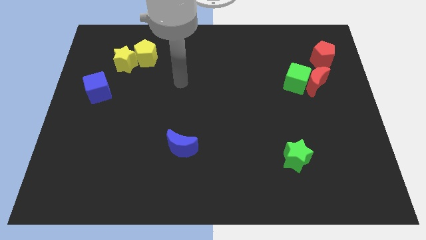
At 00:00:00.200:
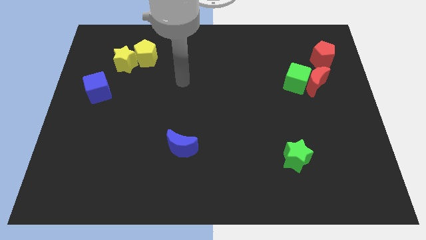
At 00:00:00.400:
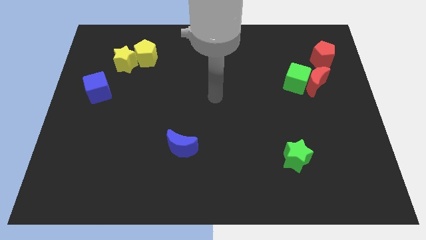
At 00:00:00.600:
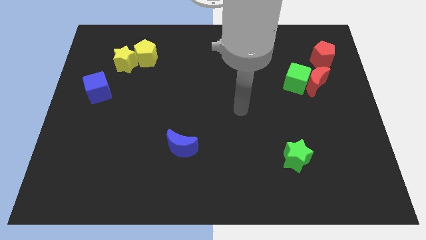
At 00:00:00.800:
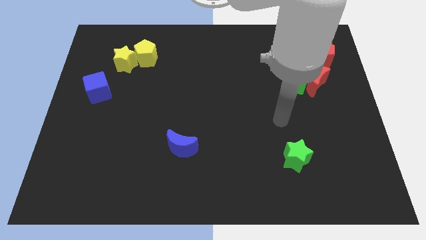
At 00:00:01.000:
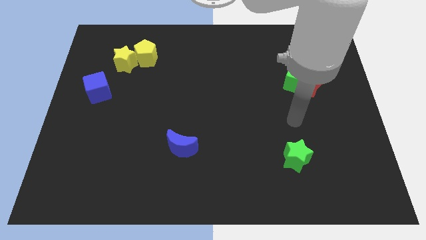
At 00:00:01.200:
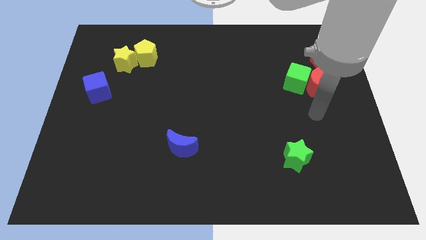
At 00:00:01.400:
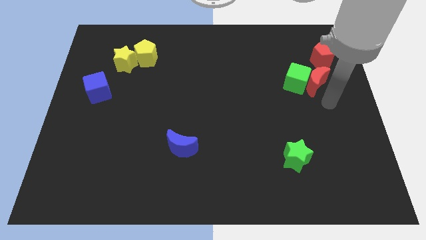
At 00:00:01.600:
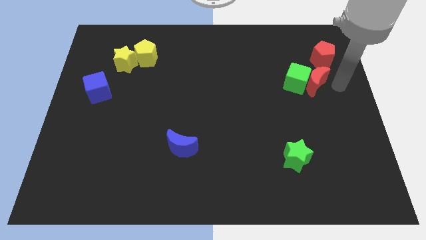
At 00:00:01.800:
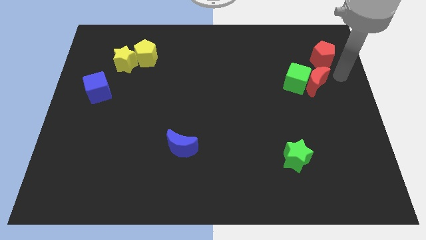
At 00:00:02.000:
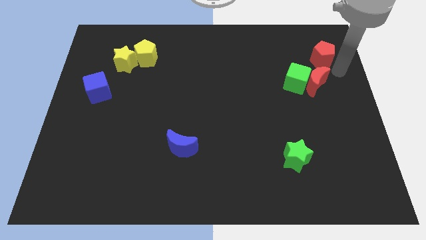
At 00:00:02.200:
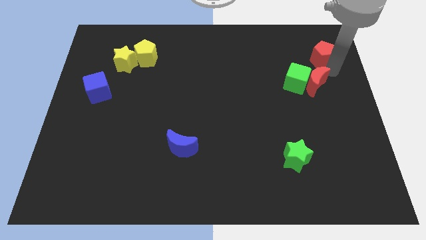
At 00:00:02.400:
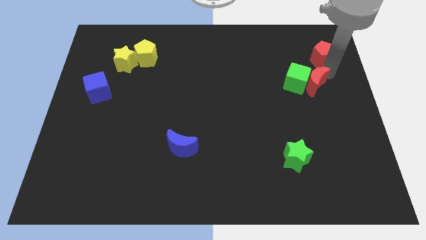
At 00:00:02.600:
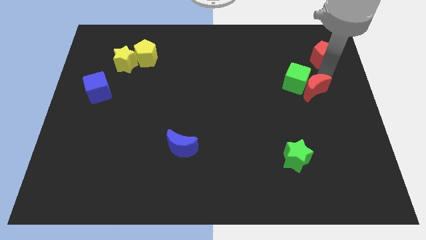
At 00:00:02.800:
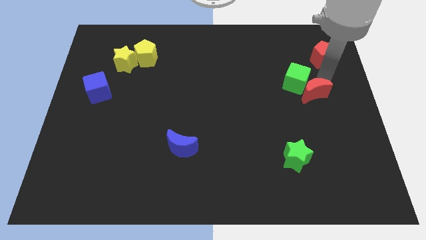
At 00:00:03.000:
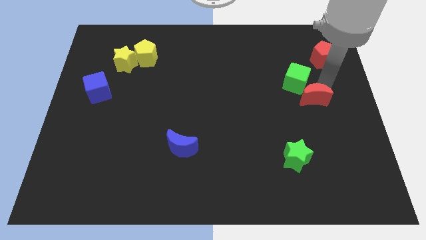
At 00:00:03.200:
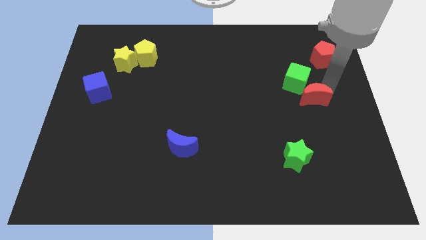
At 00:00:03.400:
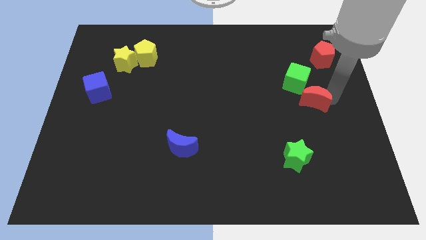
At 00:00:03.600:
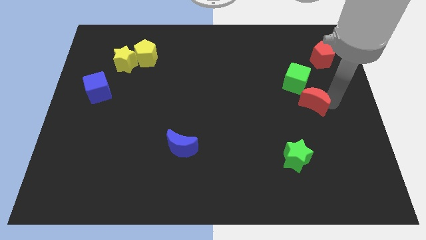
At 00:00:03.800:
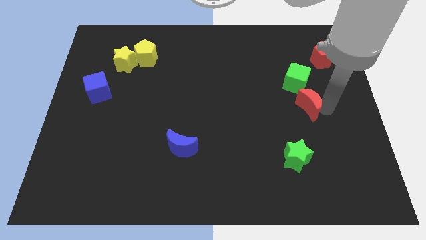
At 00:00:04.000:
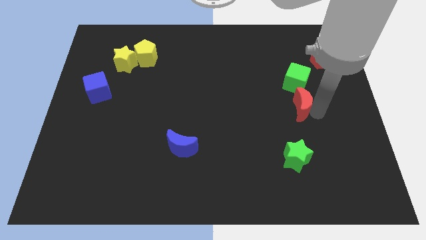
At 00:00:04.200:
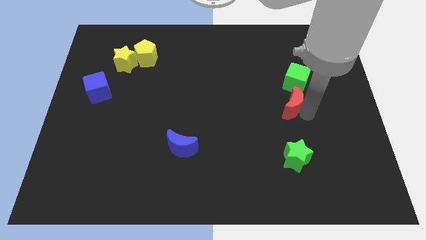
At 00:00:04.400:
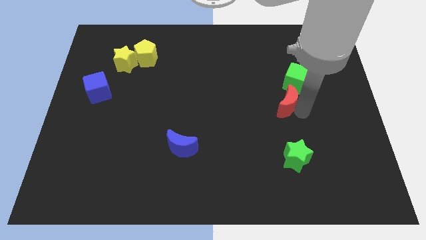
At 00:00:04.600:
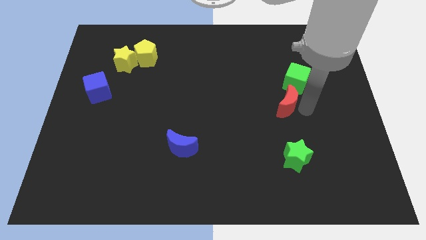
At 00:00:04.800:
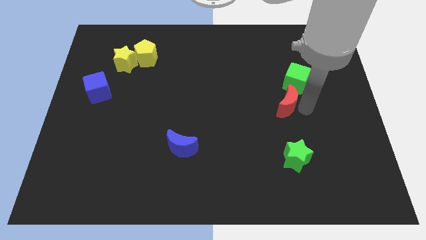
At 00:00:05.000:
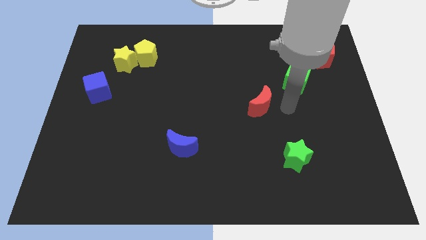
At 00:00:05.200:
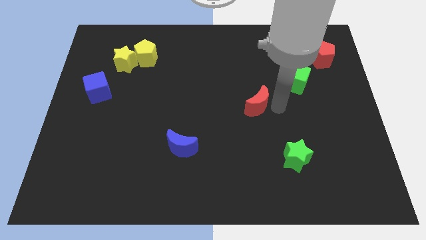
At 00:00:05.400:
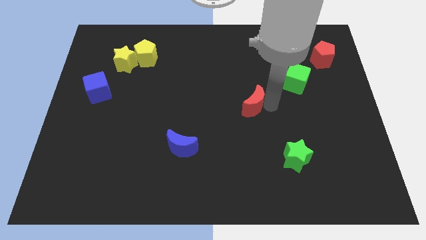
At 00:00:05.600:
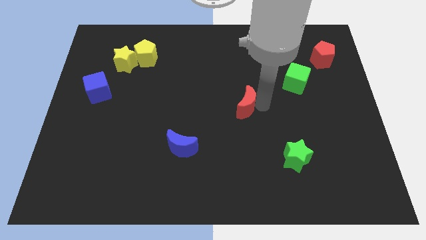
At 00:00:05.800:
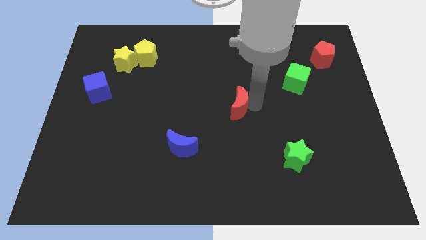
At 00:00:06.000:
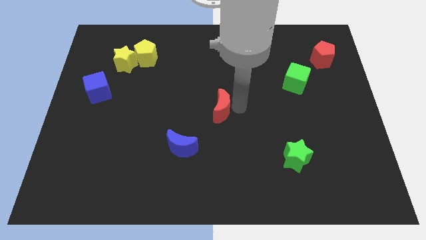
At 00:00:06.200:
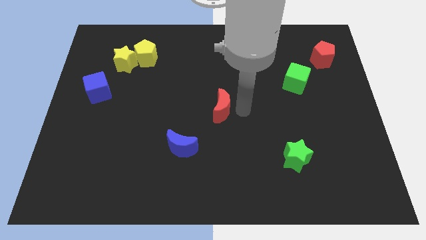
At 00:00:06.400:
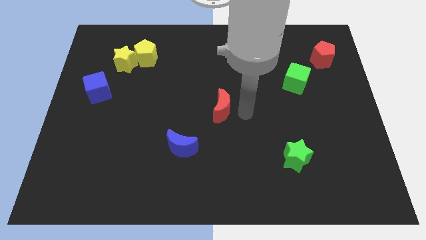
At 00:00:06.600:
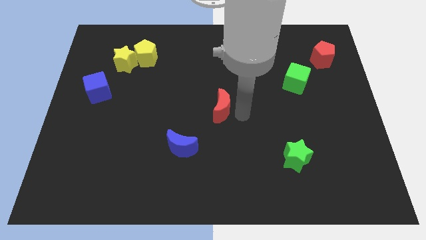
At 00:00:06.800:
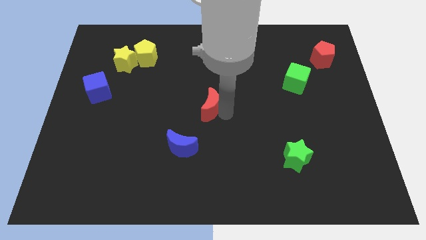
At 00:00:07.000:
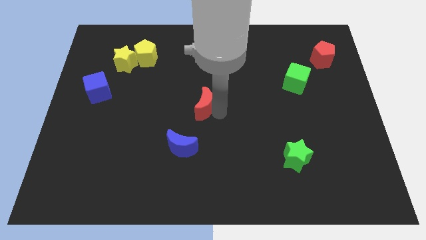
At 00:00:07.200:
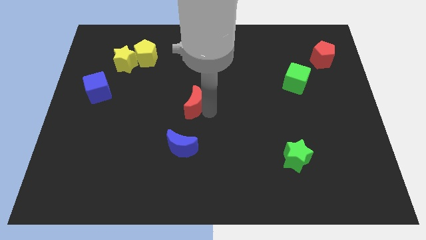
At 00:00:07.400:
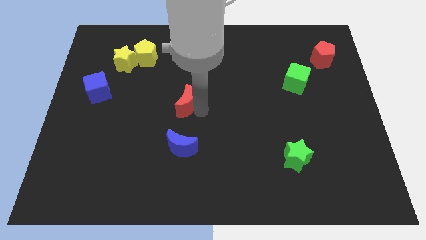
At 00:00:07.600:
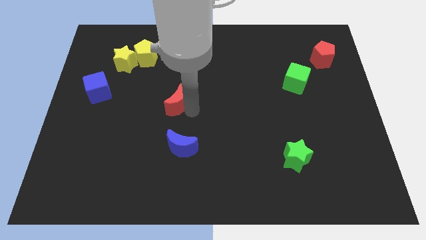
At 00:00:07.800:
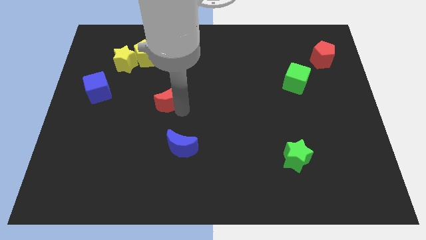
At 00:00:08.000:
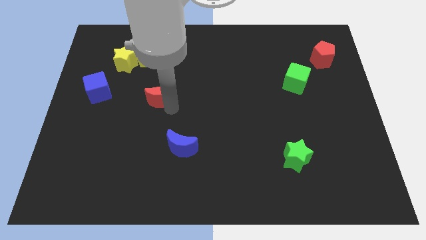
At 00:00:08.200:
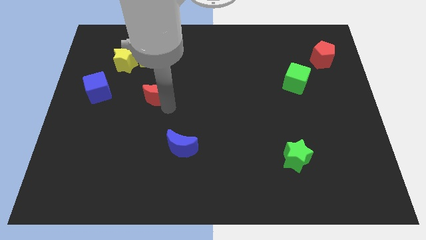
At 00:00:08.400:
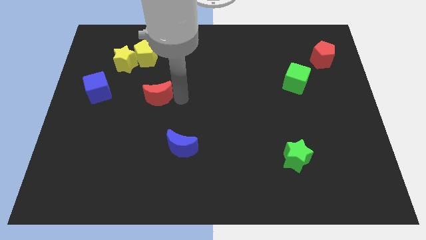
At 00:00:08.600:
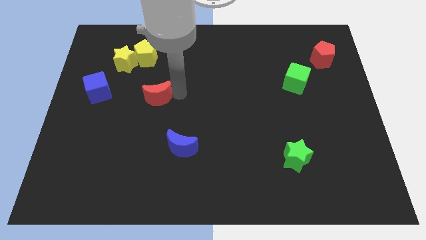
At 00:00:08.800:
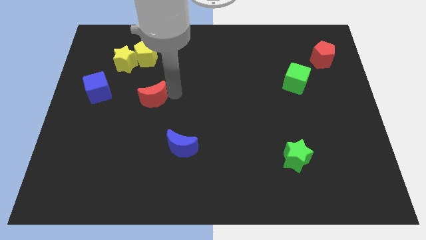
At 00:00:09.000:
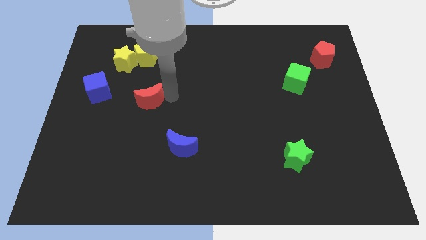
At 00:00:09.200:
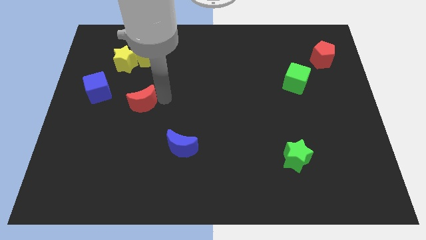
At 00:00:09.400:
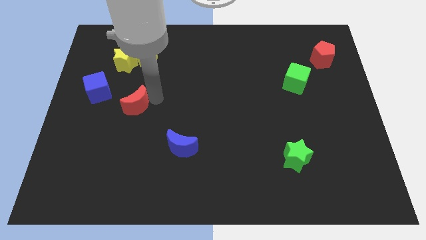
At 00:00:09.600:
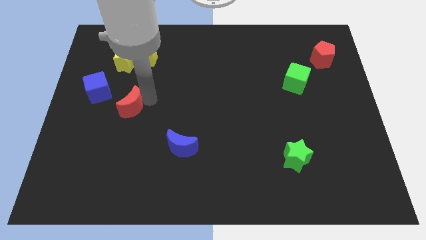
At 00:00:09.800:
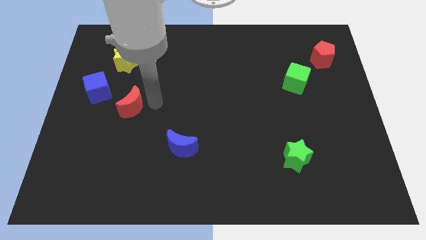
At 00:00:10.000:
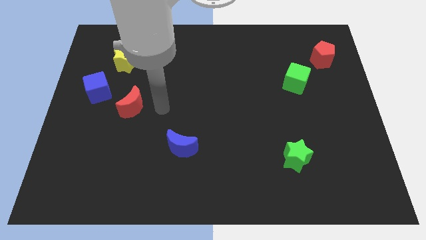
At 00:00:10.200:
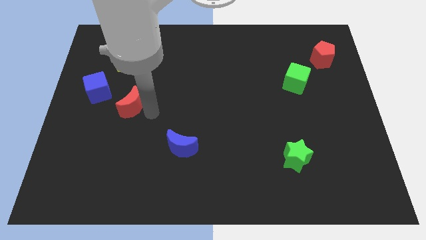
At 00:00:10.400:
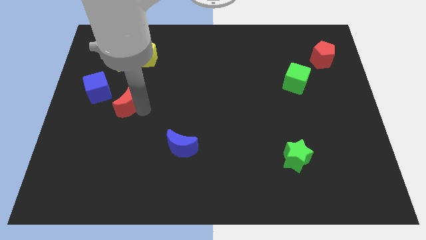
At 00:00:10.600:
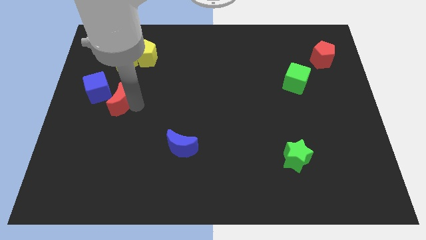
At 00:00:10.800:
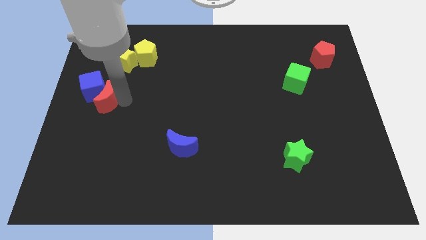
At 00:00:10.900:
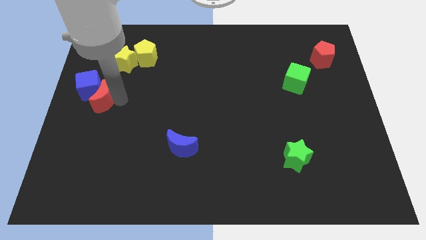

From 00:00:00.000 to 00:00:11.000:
move the red moon close to the blue cube

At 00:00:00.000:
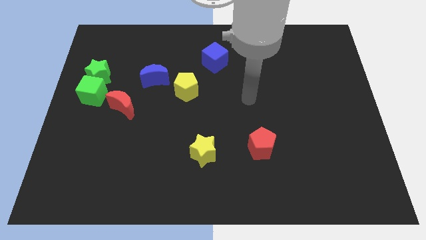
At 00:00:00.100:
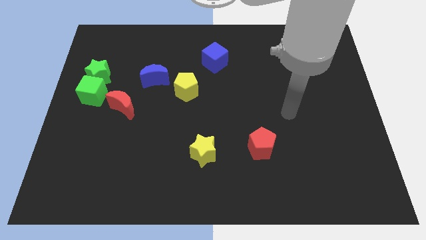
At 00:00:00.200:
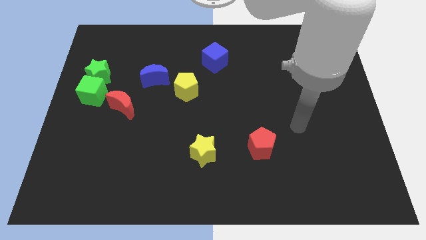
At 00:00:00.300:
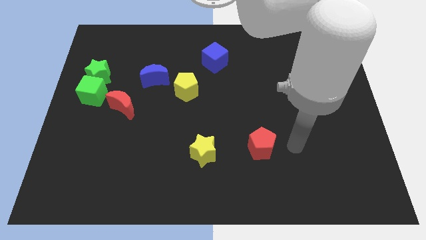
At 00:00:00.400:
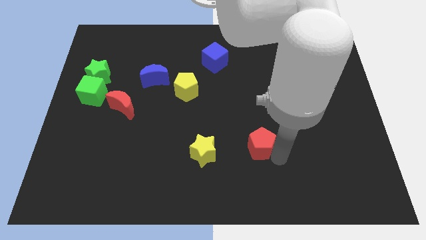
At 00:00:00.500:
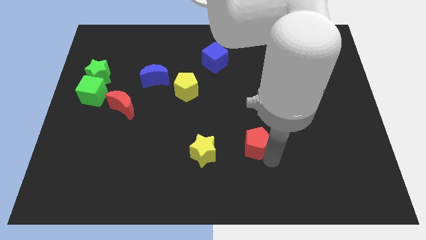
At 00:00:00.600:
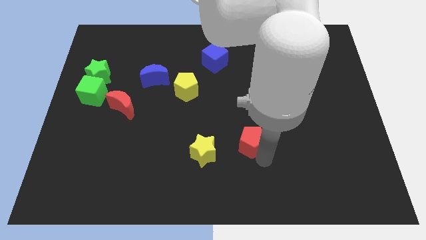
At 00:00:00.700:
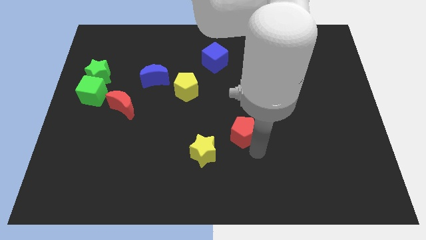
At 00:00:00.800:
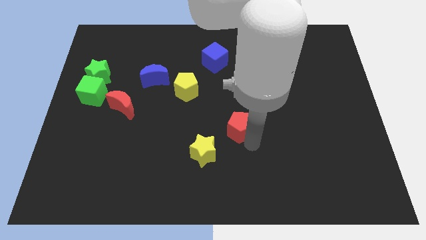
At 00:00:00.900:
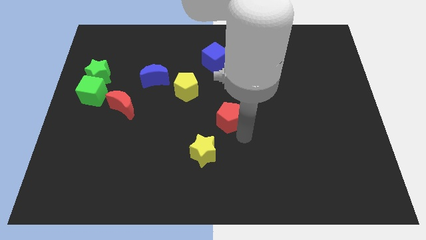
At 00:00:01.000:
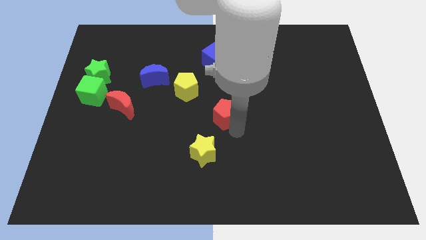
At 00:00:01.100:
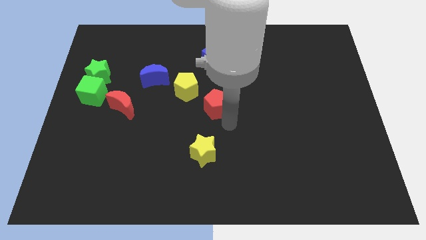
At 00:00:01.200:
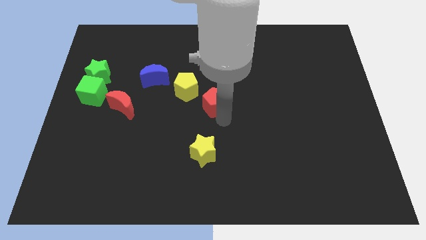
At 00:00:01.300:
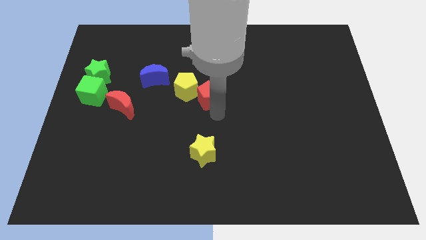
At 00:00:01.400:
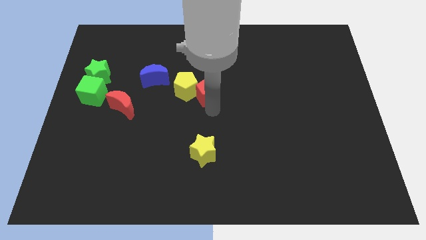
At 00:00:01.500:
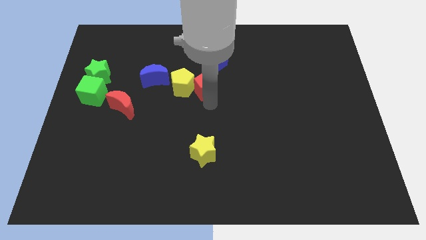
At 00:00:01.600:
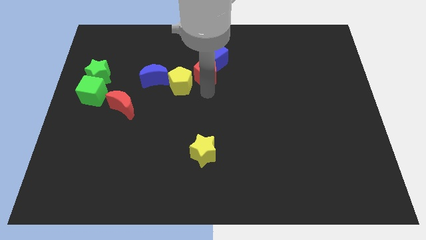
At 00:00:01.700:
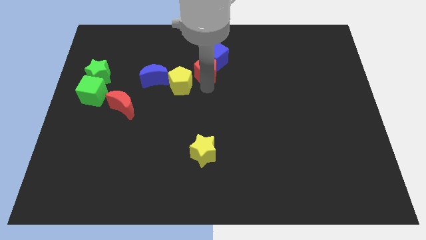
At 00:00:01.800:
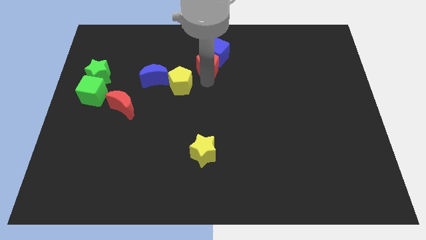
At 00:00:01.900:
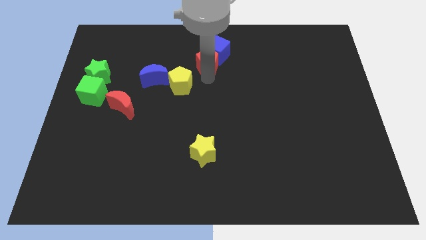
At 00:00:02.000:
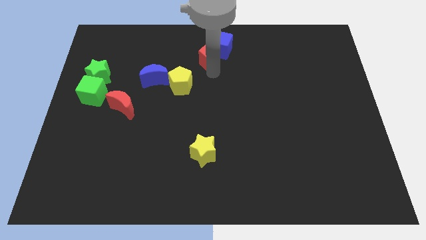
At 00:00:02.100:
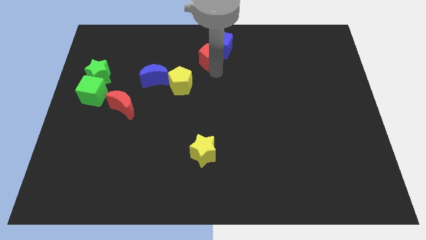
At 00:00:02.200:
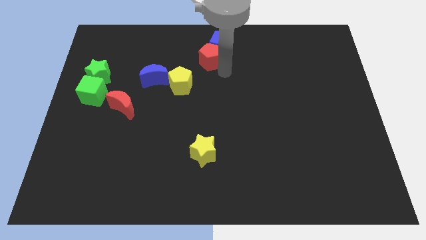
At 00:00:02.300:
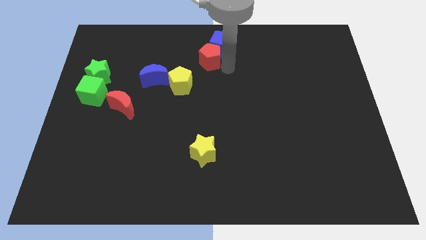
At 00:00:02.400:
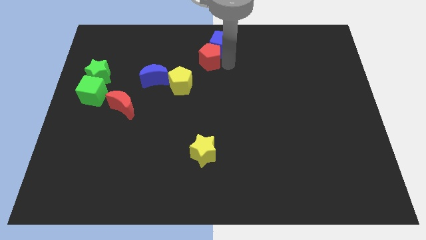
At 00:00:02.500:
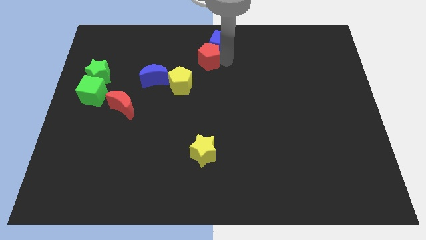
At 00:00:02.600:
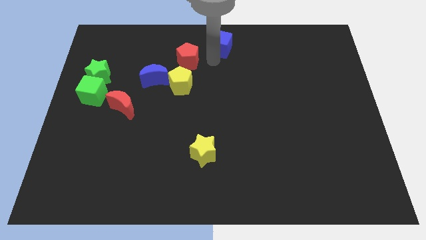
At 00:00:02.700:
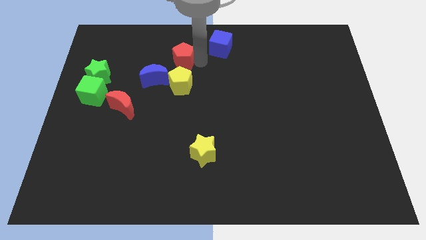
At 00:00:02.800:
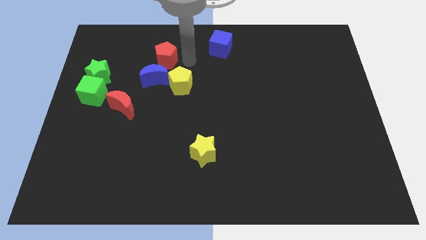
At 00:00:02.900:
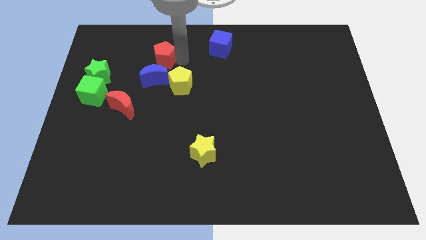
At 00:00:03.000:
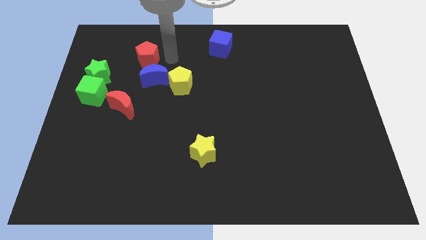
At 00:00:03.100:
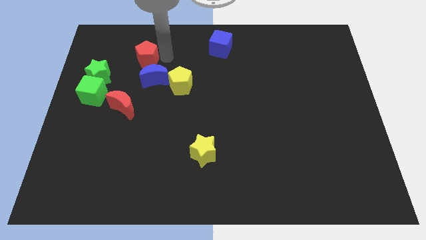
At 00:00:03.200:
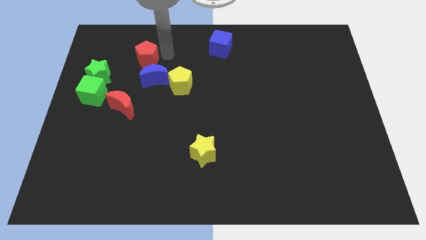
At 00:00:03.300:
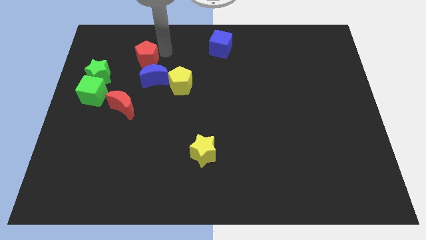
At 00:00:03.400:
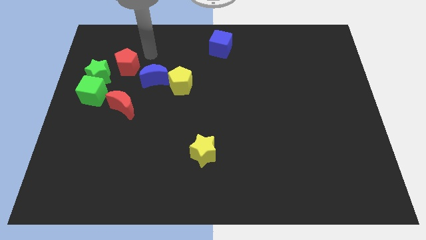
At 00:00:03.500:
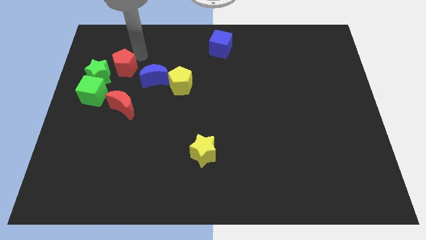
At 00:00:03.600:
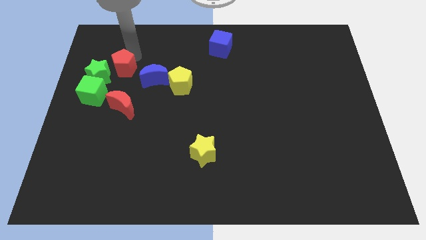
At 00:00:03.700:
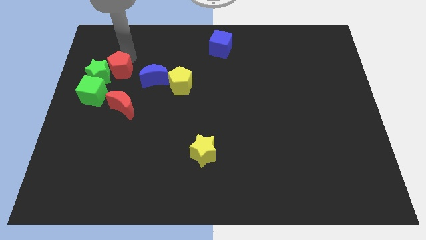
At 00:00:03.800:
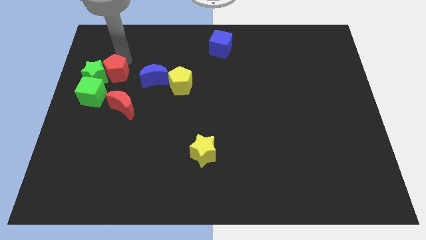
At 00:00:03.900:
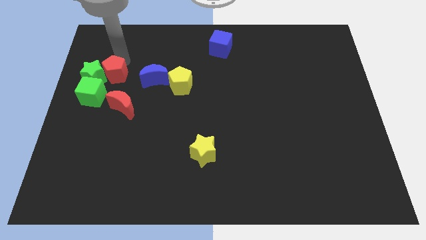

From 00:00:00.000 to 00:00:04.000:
slide the red pentagon close to the green star
